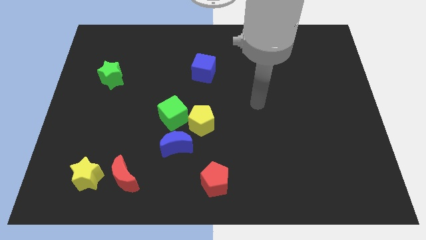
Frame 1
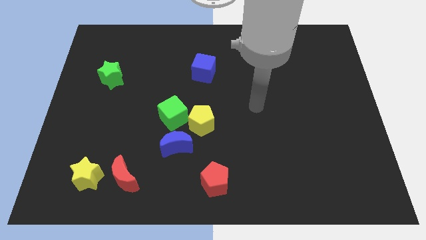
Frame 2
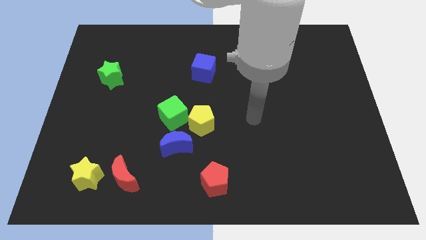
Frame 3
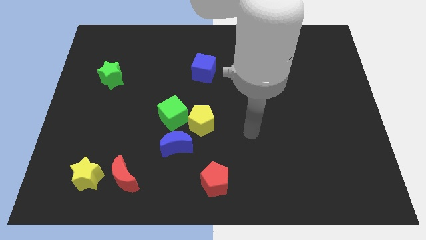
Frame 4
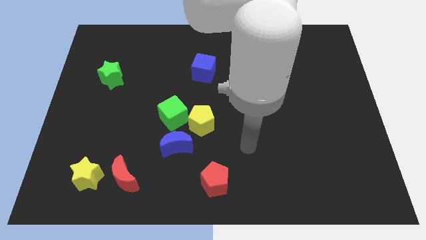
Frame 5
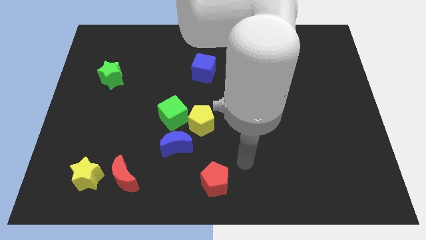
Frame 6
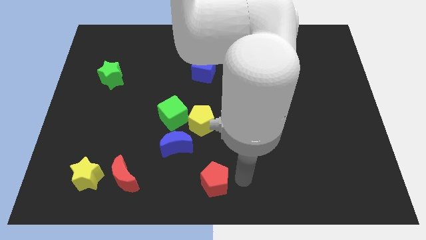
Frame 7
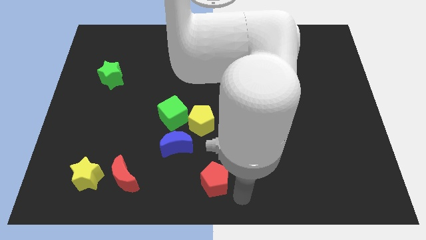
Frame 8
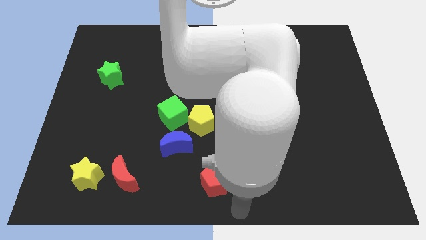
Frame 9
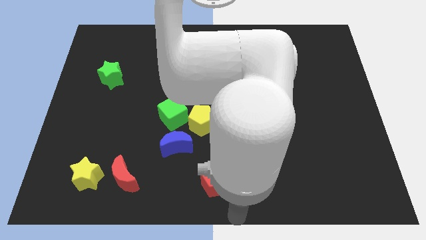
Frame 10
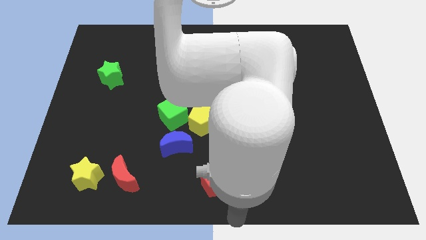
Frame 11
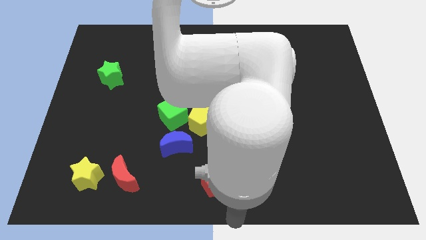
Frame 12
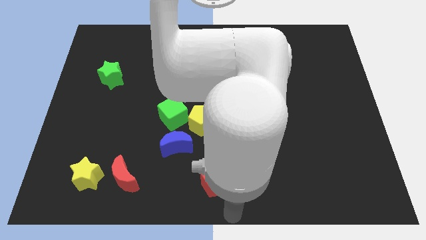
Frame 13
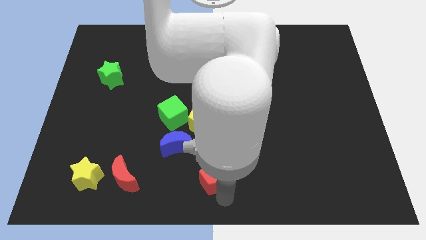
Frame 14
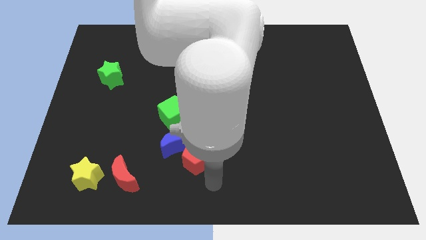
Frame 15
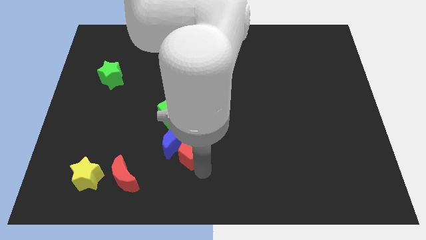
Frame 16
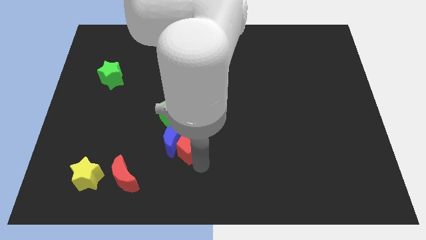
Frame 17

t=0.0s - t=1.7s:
push the red pentagon into the blue crescent

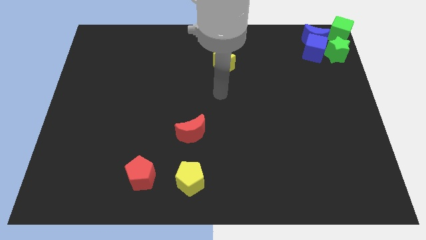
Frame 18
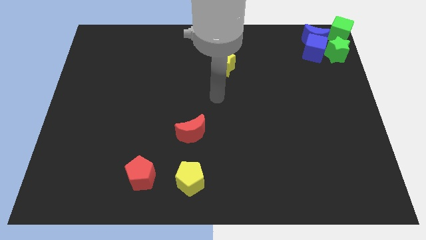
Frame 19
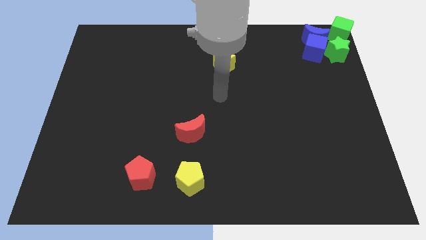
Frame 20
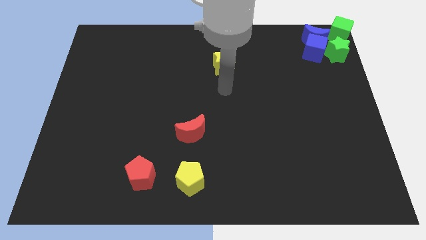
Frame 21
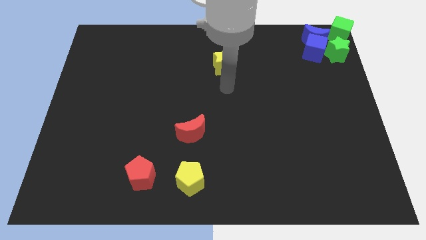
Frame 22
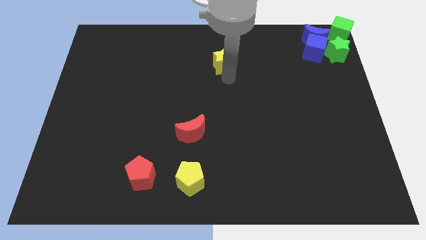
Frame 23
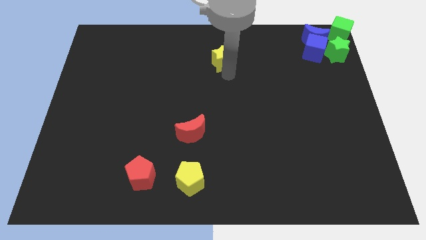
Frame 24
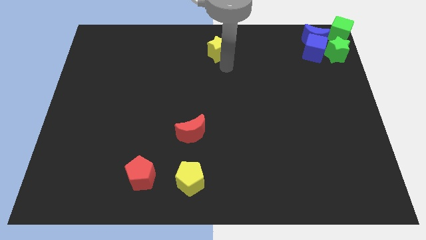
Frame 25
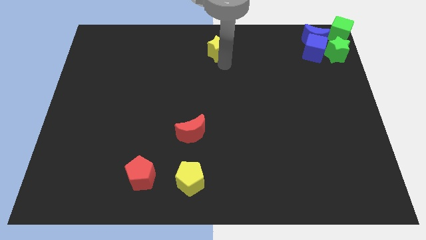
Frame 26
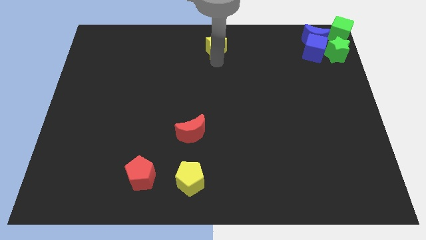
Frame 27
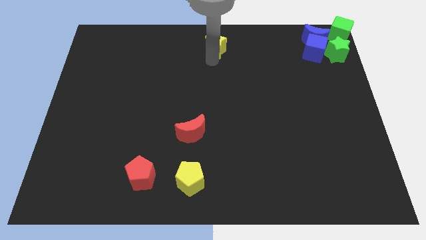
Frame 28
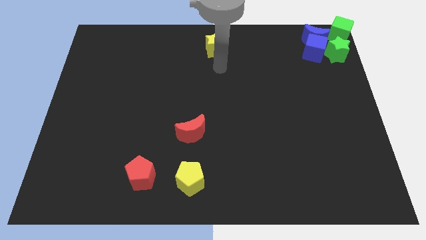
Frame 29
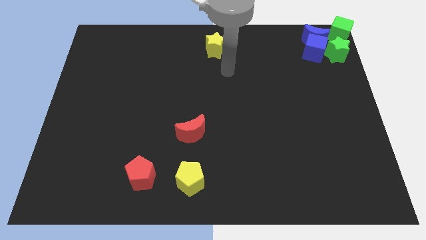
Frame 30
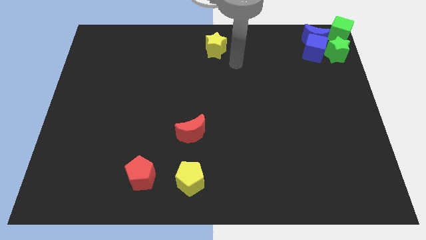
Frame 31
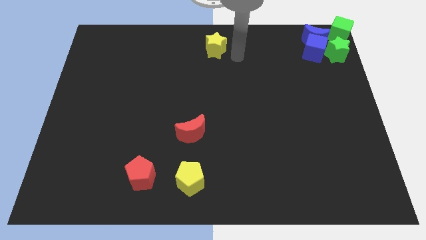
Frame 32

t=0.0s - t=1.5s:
push the yellow star slightly towards up

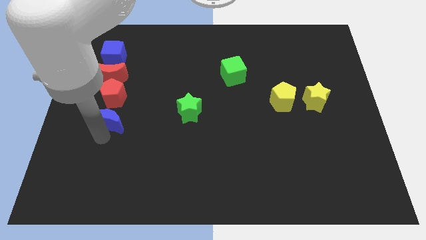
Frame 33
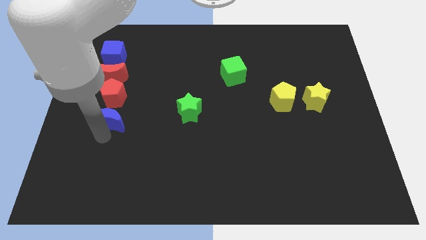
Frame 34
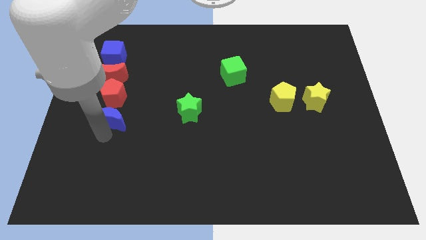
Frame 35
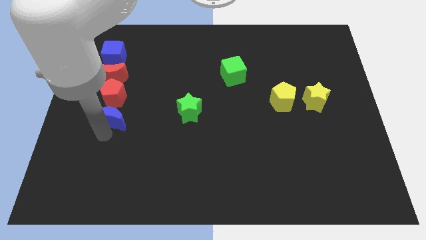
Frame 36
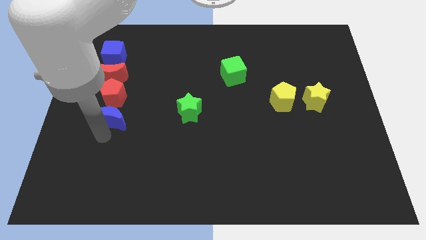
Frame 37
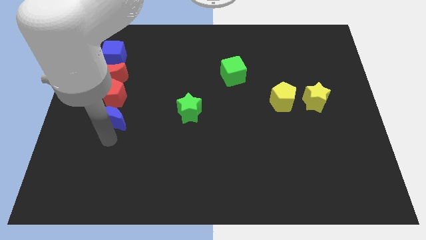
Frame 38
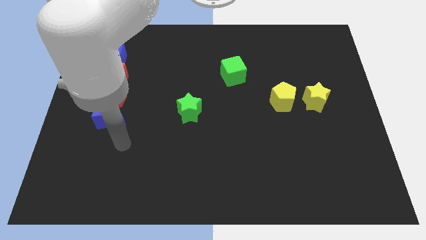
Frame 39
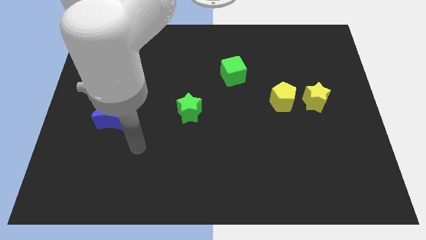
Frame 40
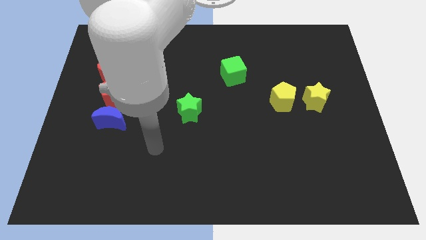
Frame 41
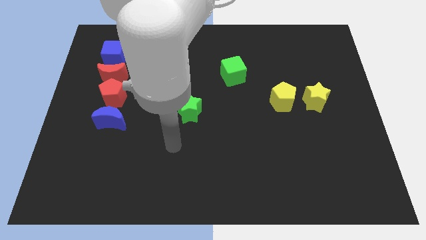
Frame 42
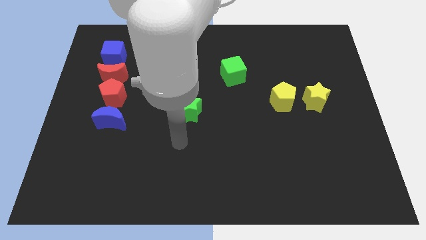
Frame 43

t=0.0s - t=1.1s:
place the blue crescent below the red pentagon

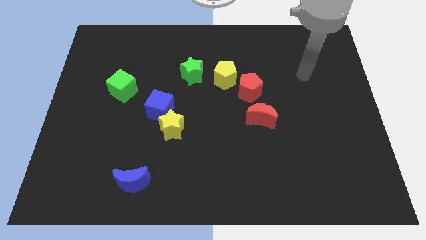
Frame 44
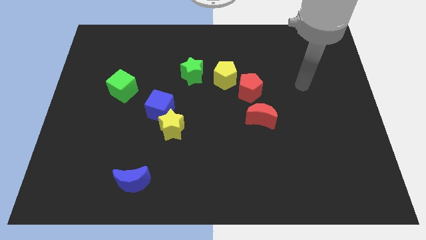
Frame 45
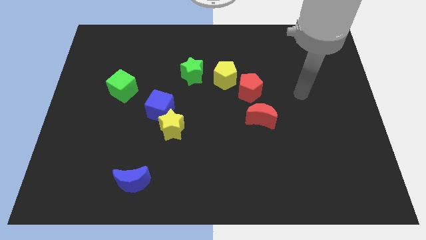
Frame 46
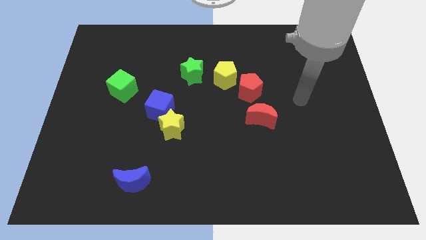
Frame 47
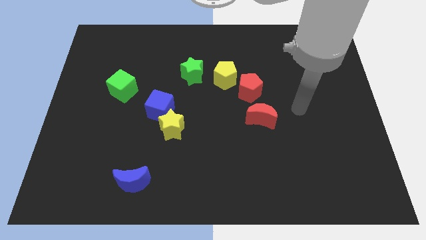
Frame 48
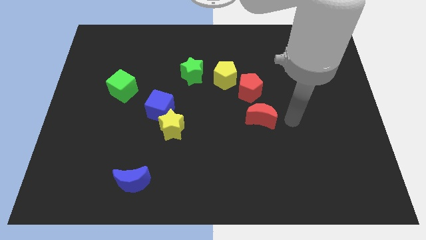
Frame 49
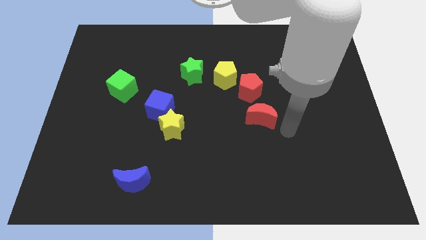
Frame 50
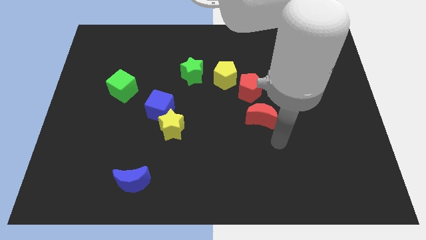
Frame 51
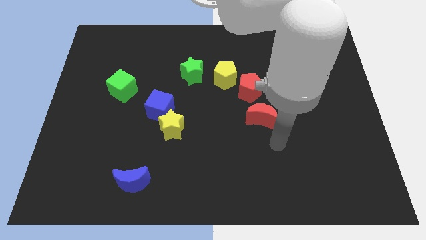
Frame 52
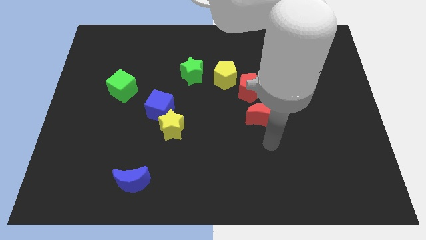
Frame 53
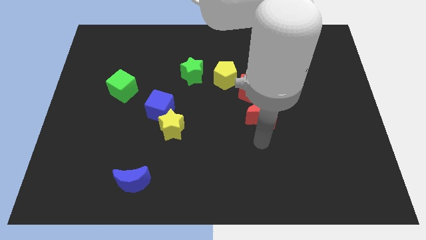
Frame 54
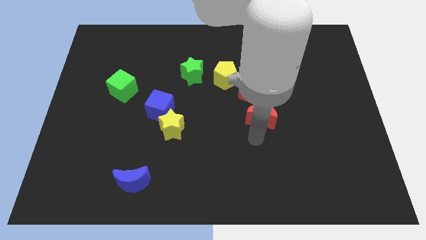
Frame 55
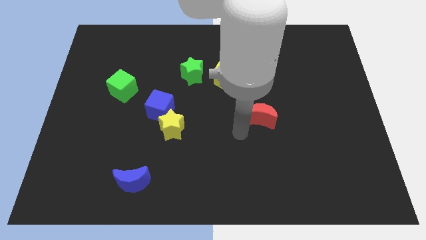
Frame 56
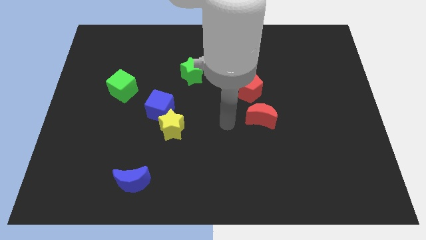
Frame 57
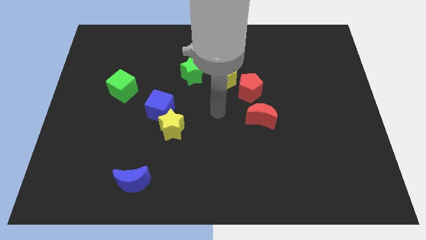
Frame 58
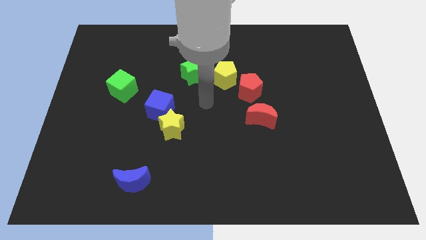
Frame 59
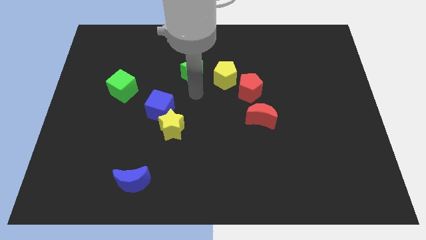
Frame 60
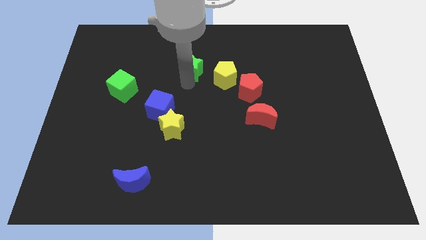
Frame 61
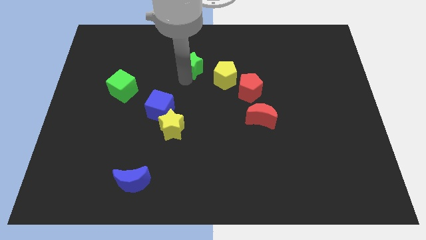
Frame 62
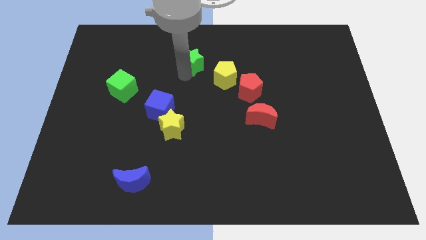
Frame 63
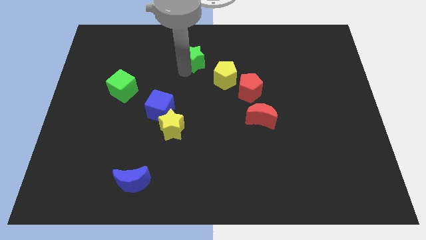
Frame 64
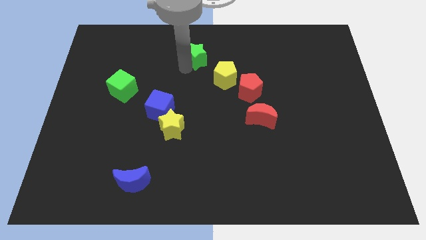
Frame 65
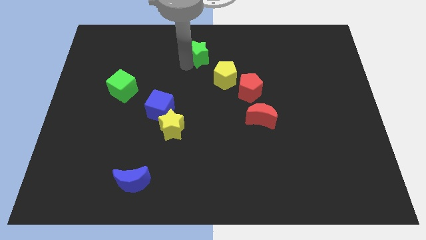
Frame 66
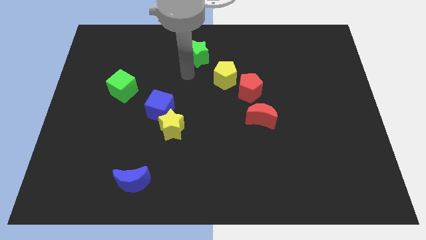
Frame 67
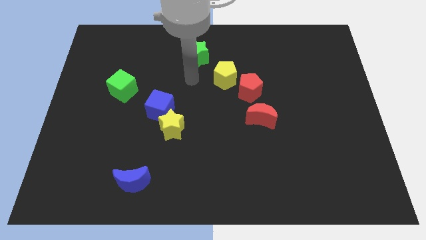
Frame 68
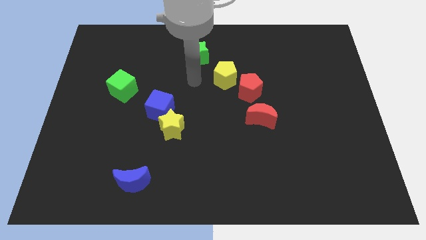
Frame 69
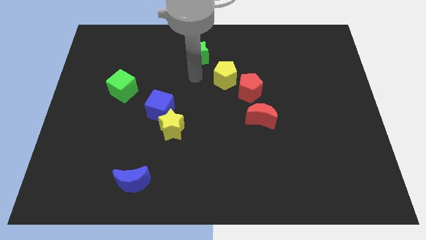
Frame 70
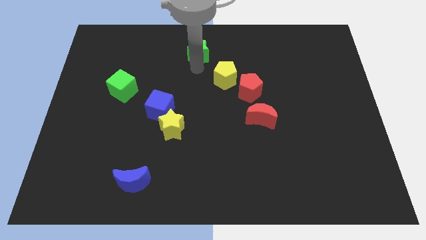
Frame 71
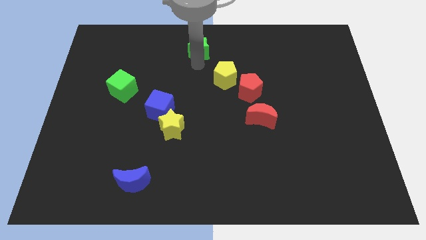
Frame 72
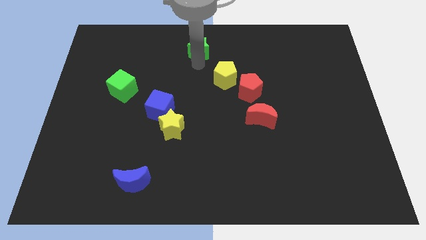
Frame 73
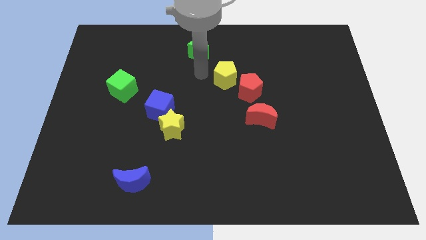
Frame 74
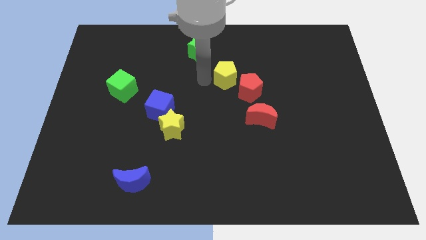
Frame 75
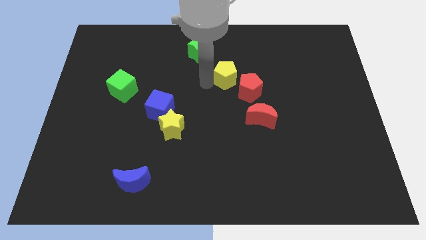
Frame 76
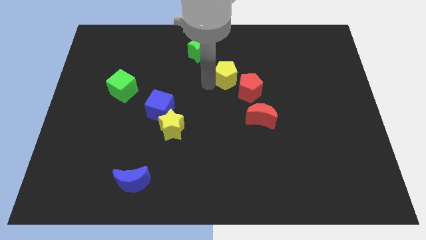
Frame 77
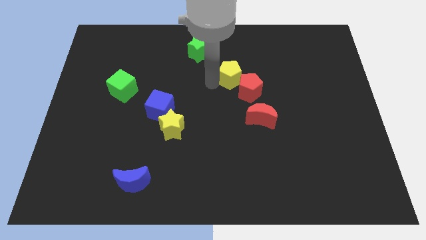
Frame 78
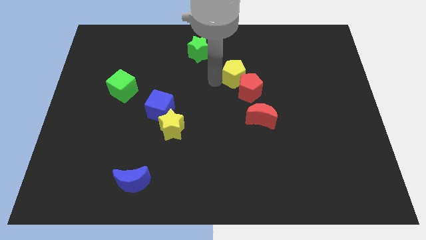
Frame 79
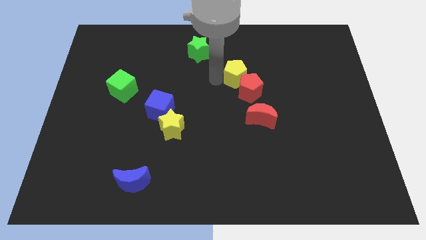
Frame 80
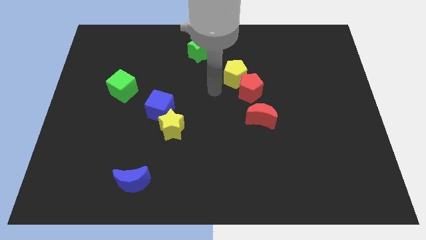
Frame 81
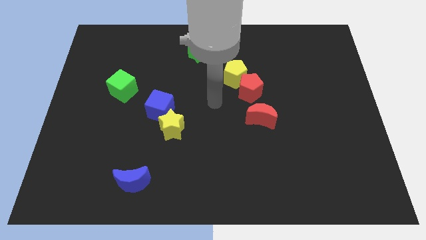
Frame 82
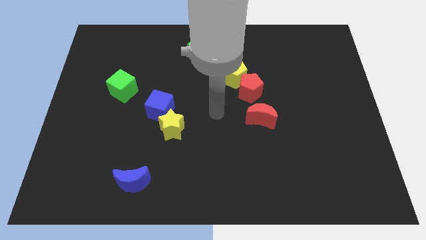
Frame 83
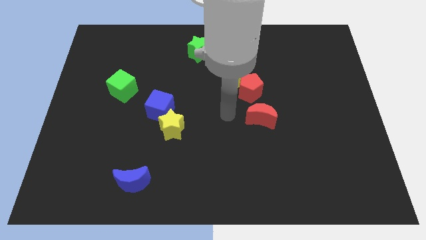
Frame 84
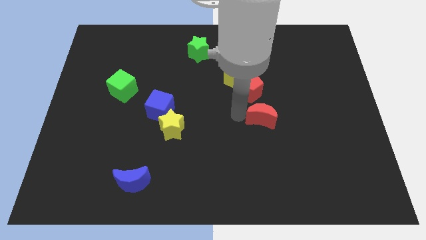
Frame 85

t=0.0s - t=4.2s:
place the arm left to the red moon

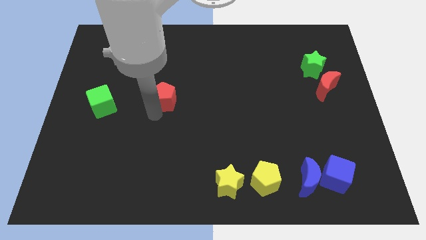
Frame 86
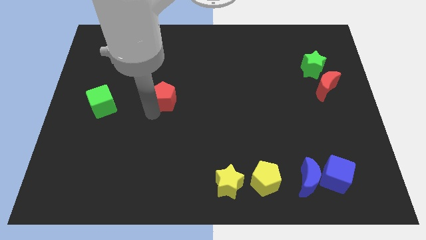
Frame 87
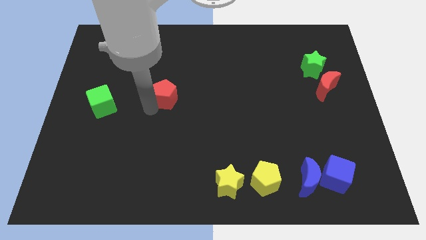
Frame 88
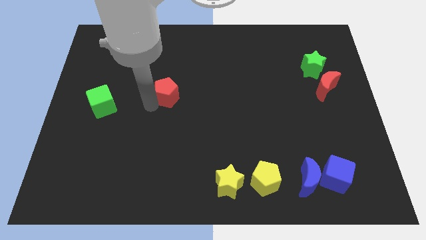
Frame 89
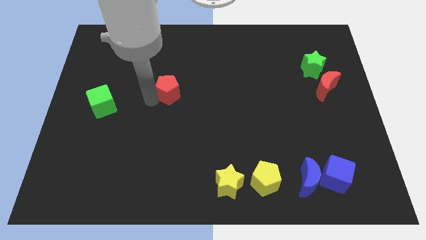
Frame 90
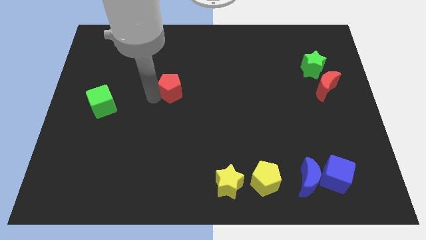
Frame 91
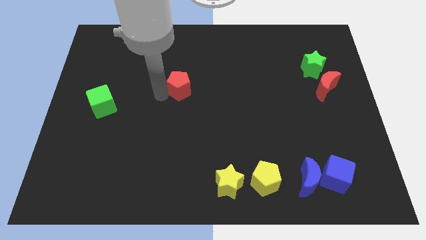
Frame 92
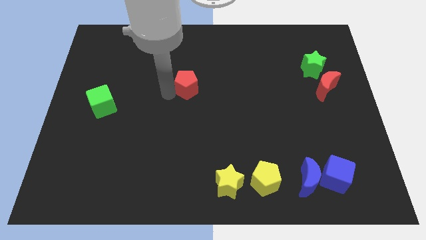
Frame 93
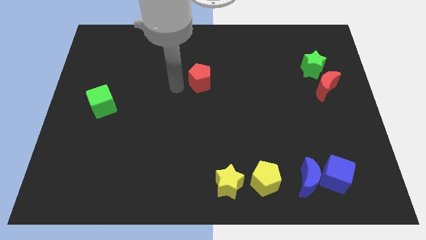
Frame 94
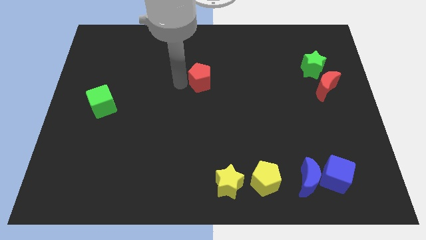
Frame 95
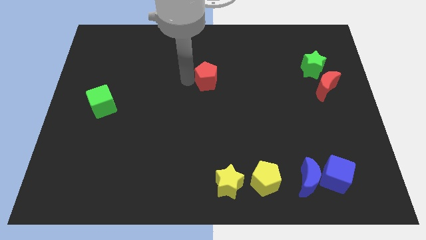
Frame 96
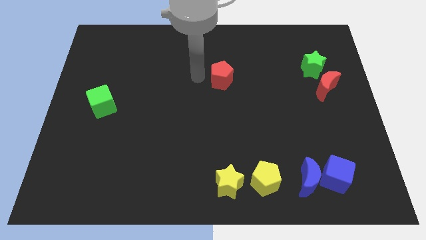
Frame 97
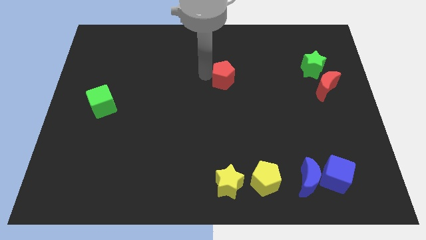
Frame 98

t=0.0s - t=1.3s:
put red pentagon at center
